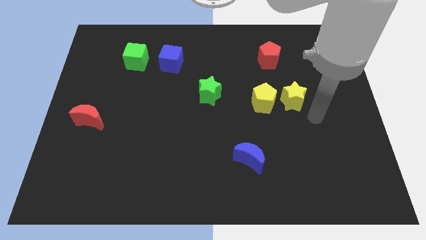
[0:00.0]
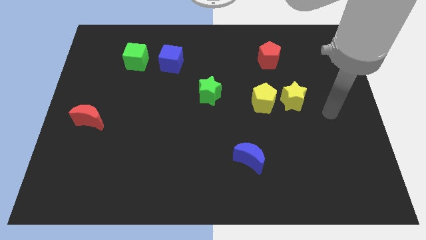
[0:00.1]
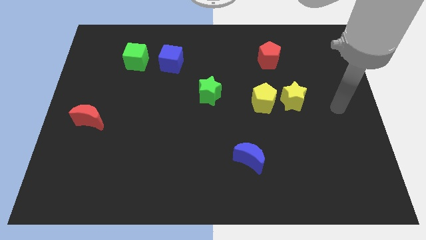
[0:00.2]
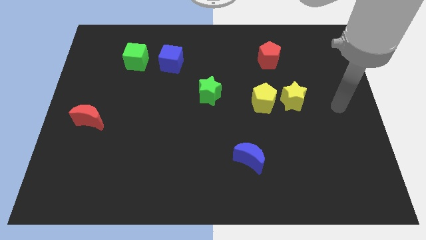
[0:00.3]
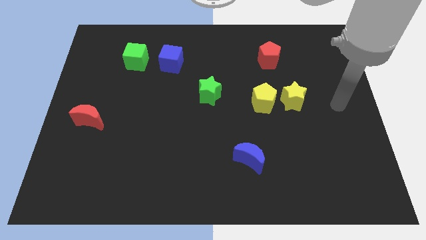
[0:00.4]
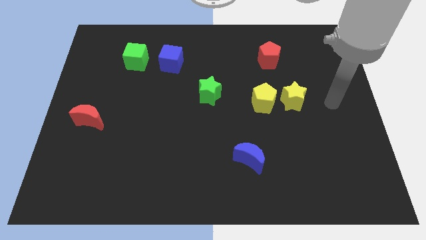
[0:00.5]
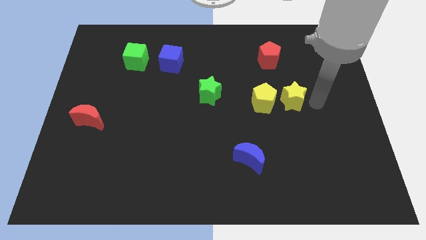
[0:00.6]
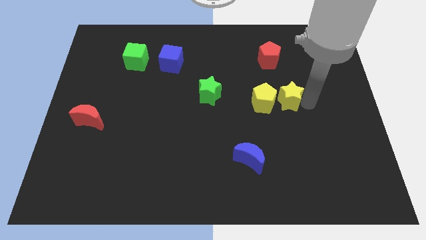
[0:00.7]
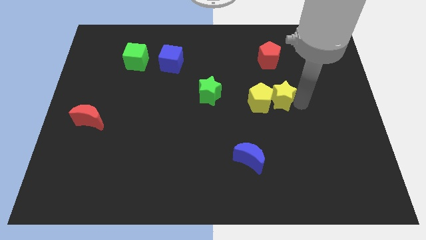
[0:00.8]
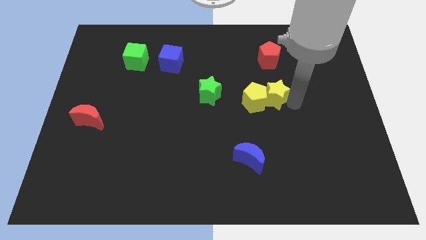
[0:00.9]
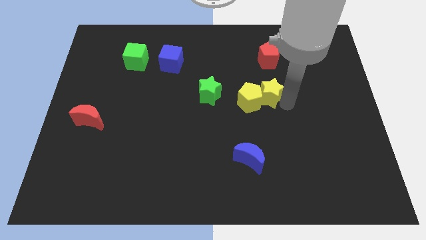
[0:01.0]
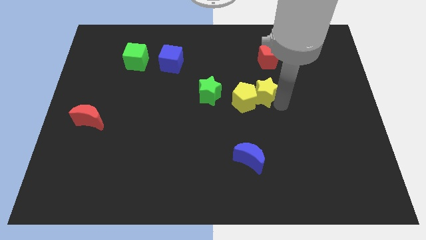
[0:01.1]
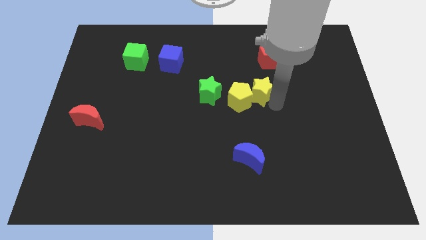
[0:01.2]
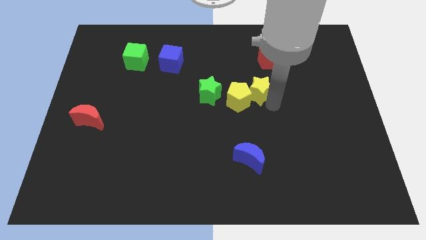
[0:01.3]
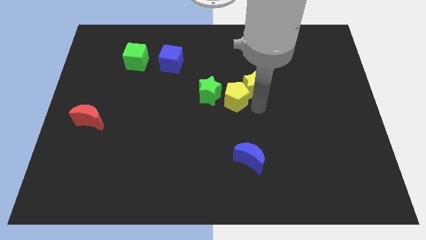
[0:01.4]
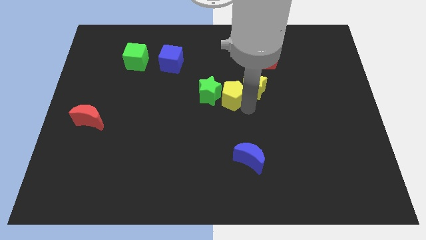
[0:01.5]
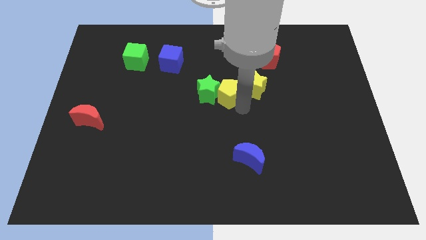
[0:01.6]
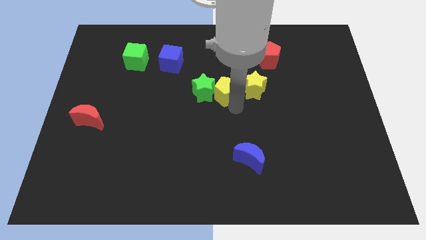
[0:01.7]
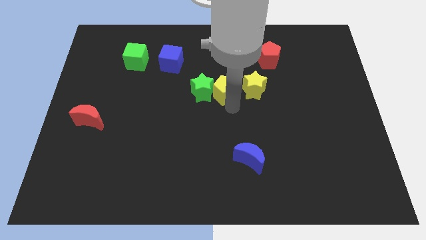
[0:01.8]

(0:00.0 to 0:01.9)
move yellow blocks towards the green star

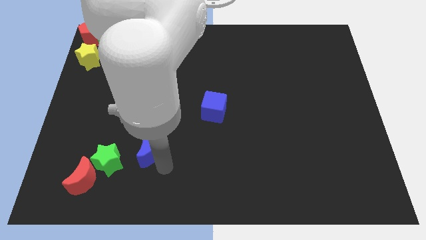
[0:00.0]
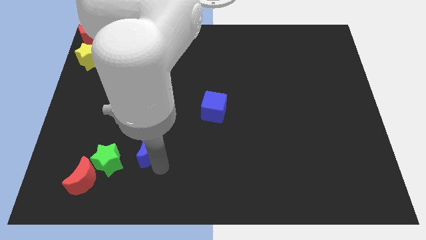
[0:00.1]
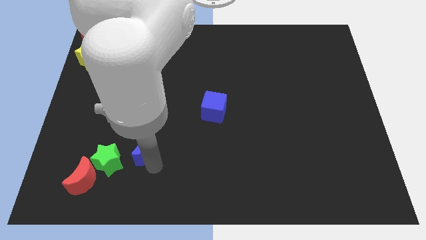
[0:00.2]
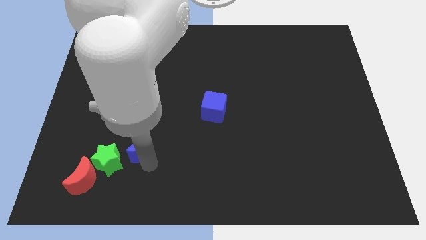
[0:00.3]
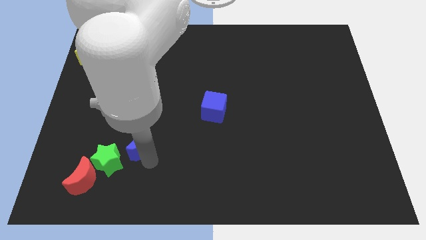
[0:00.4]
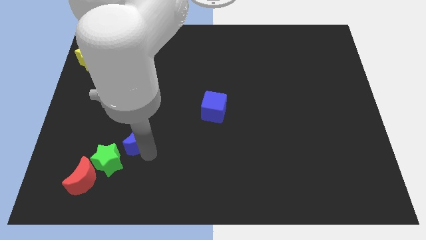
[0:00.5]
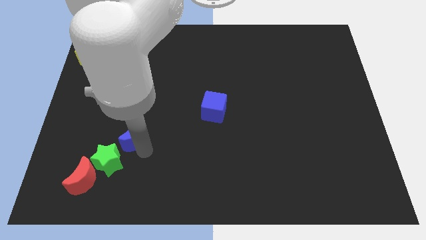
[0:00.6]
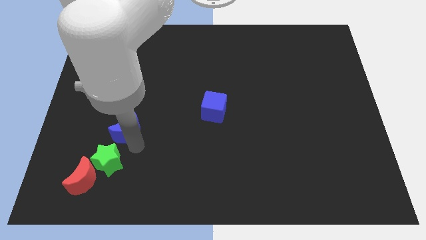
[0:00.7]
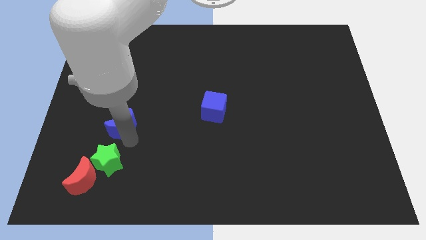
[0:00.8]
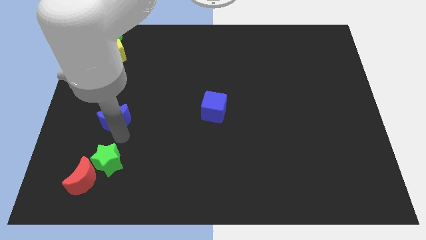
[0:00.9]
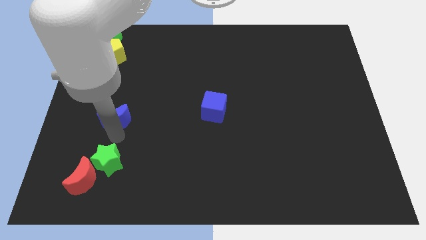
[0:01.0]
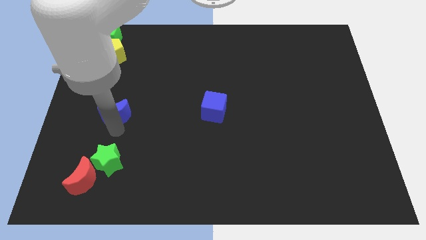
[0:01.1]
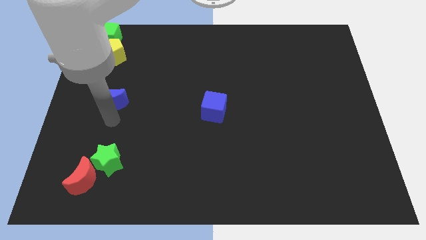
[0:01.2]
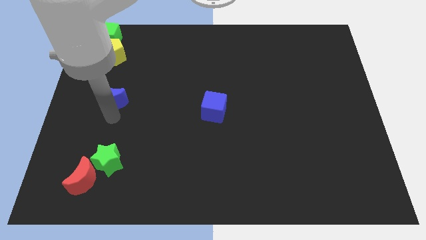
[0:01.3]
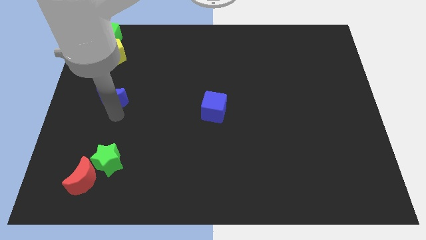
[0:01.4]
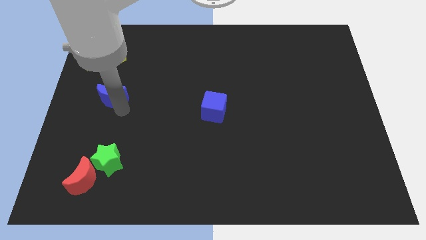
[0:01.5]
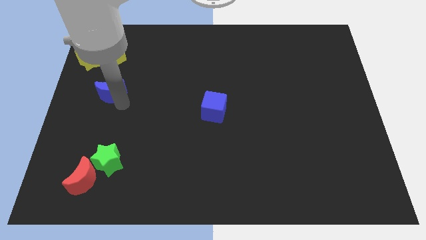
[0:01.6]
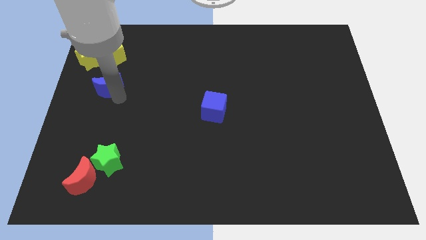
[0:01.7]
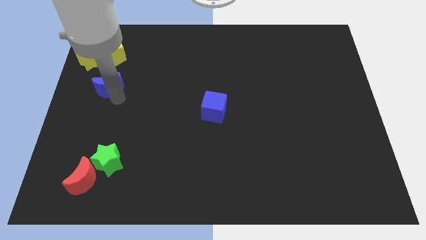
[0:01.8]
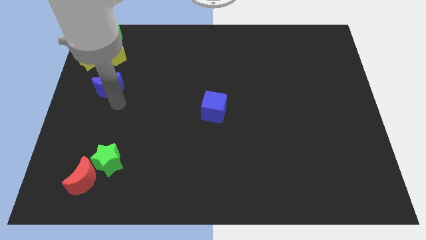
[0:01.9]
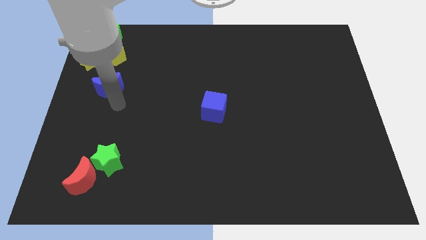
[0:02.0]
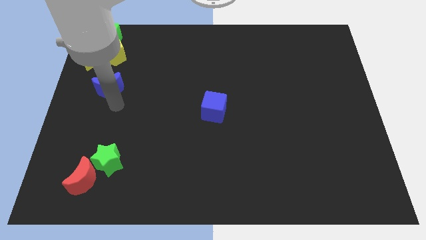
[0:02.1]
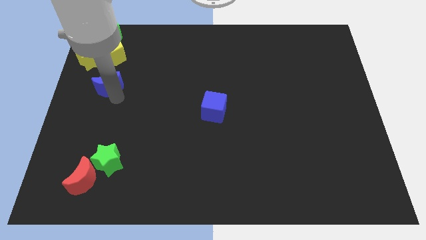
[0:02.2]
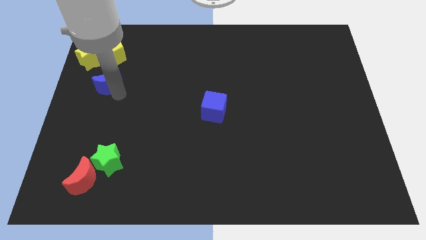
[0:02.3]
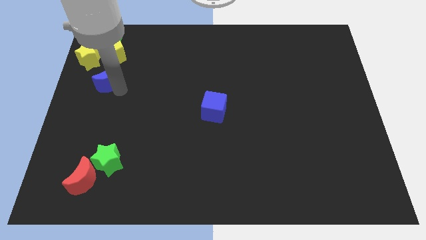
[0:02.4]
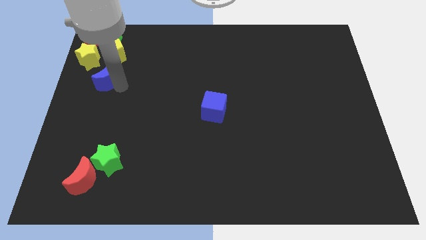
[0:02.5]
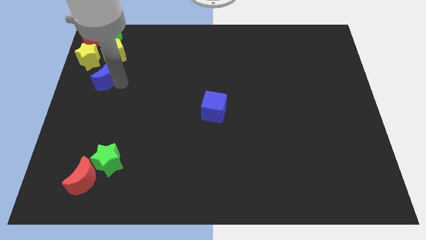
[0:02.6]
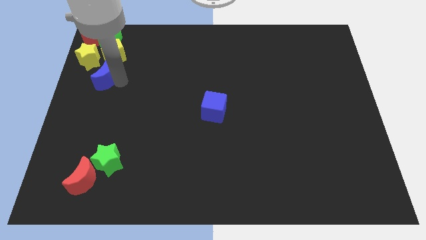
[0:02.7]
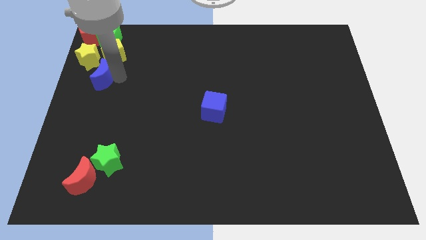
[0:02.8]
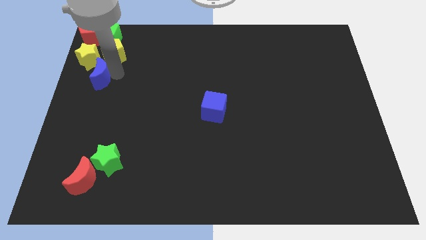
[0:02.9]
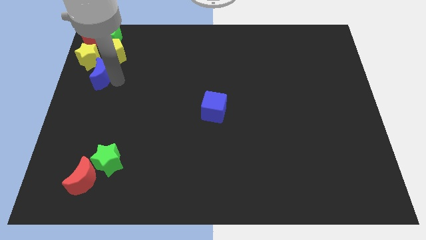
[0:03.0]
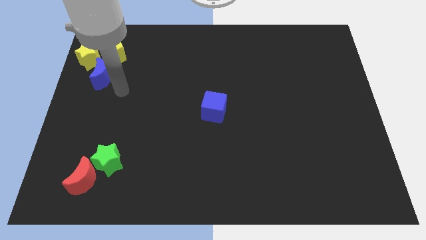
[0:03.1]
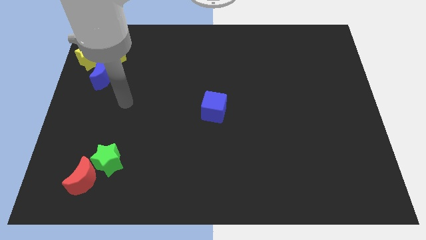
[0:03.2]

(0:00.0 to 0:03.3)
move blue moon to the bottom right of yellow star

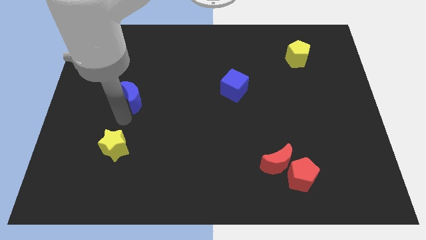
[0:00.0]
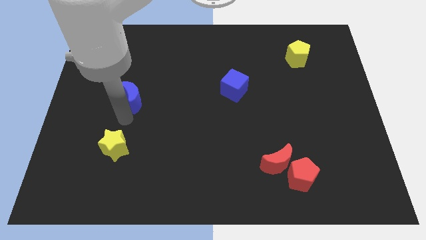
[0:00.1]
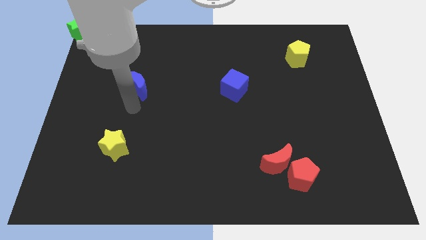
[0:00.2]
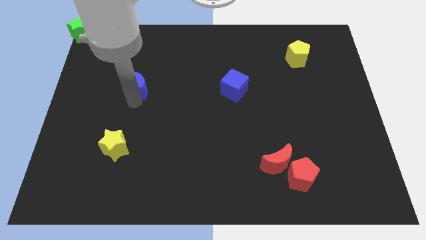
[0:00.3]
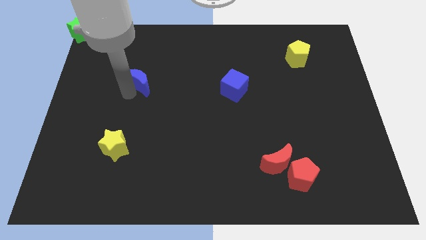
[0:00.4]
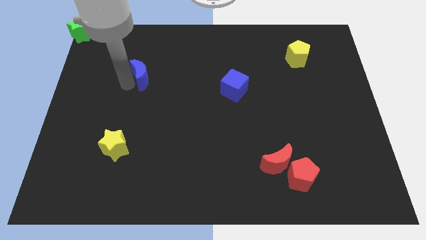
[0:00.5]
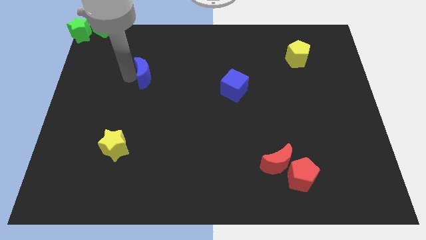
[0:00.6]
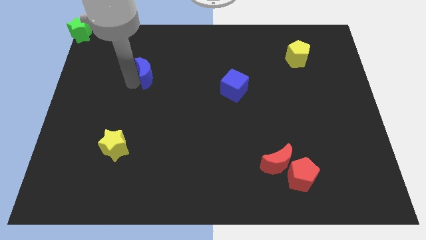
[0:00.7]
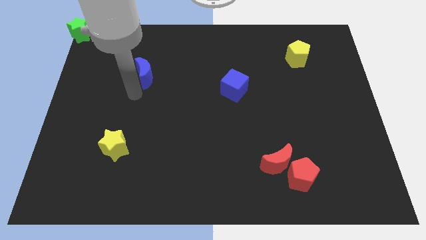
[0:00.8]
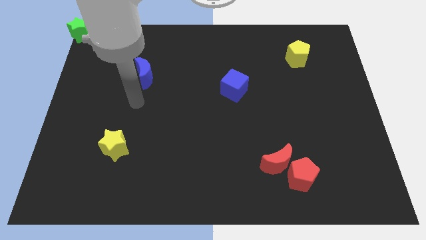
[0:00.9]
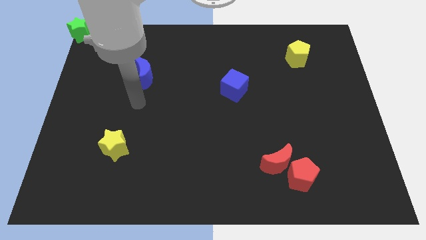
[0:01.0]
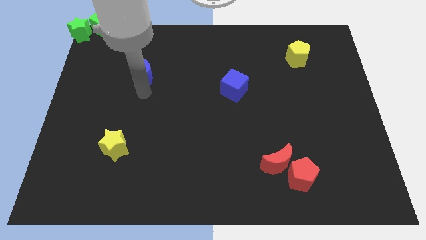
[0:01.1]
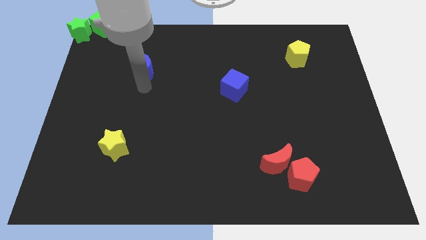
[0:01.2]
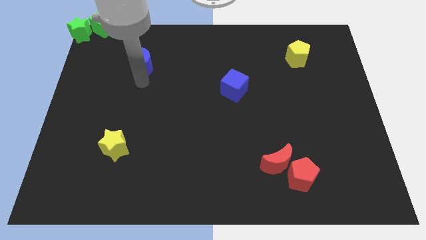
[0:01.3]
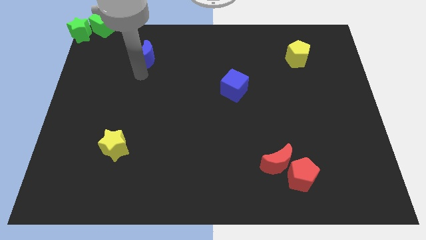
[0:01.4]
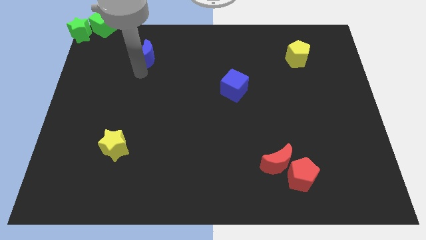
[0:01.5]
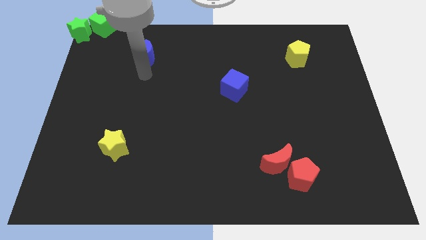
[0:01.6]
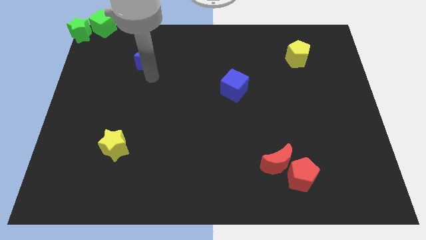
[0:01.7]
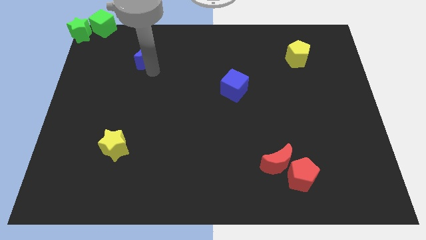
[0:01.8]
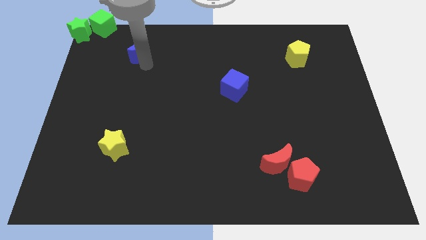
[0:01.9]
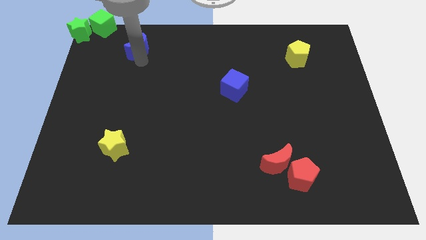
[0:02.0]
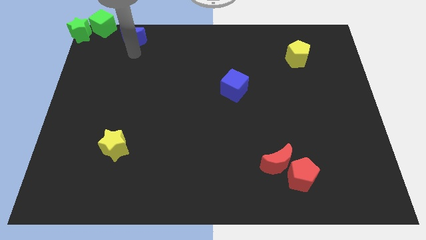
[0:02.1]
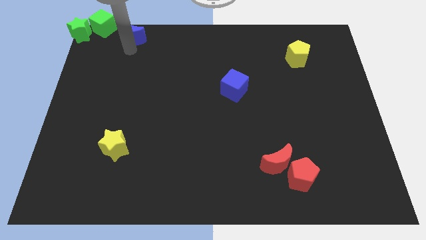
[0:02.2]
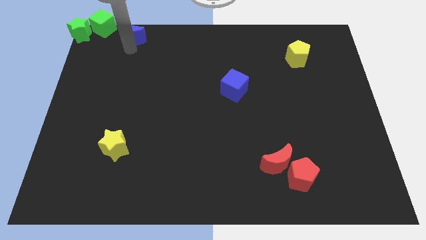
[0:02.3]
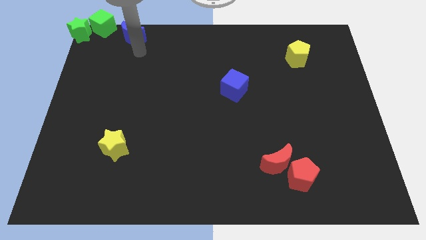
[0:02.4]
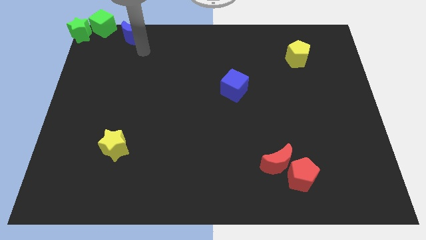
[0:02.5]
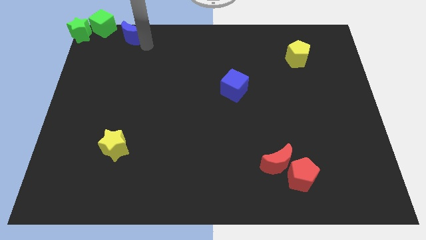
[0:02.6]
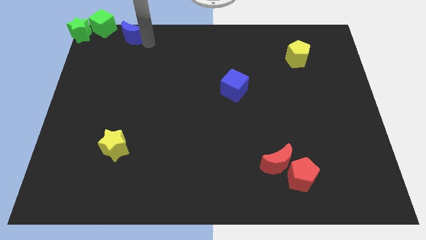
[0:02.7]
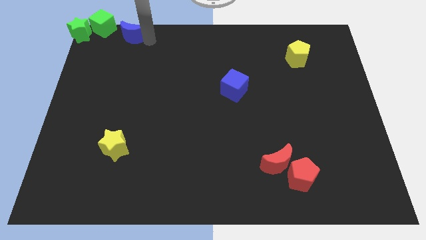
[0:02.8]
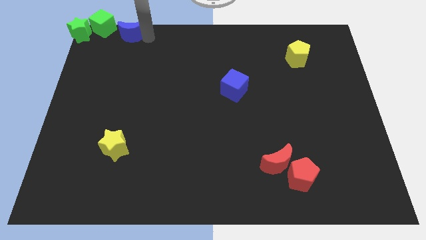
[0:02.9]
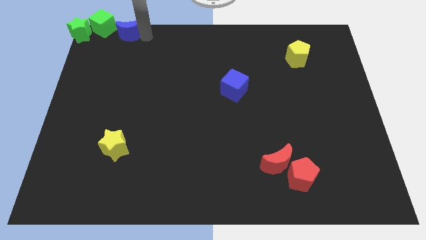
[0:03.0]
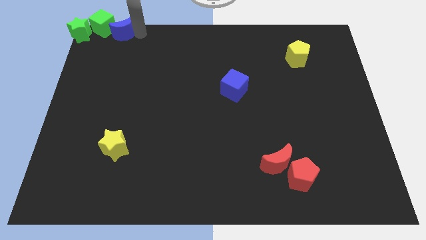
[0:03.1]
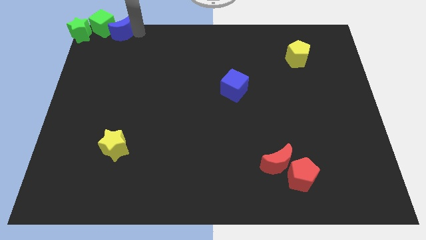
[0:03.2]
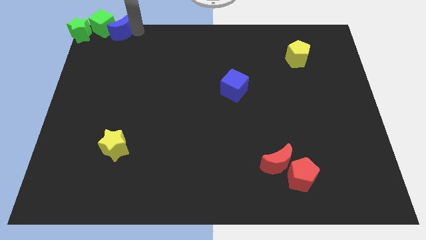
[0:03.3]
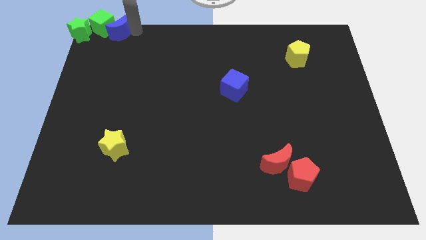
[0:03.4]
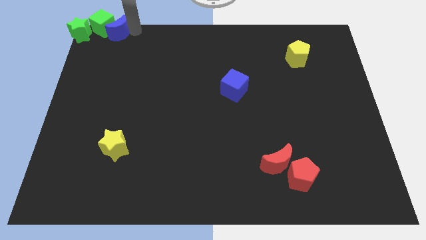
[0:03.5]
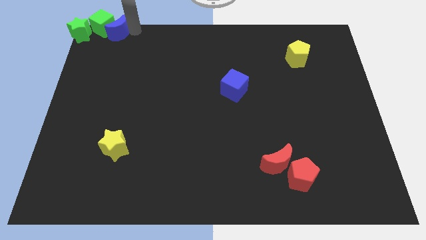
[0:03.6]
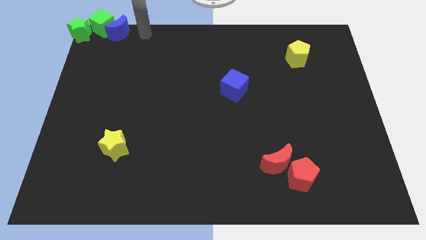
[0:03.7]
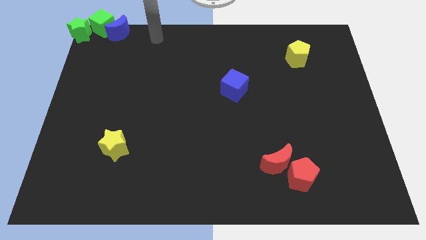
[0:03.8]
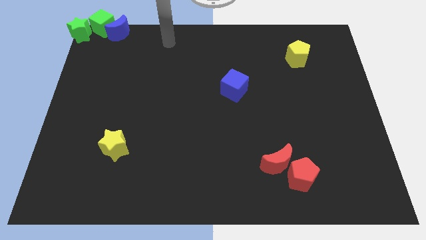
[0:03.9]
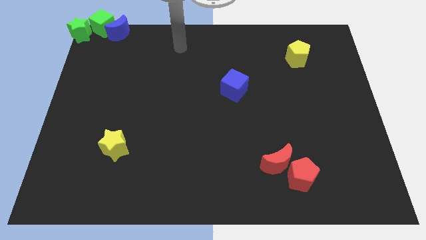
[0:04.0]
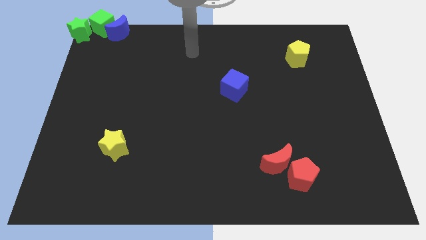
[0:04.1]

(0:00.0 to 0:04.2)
push the blue crescent to the right of the green cube
